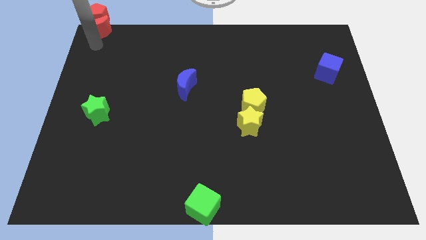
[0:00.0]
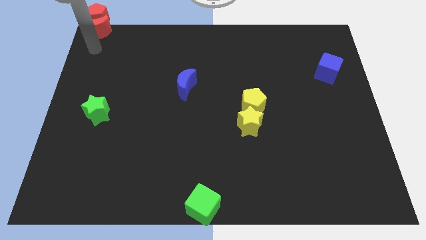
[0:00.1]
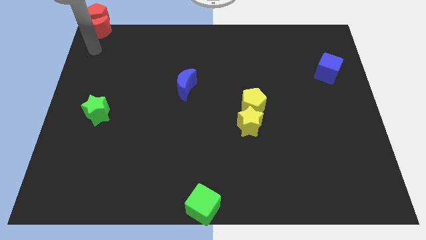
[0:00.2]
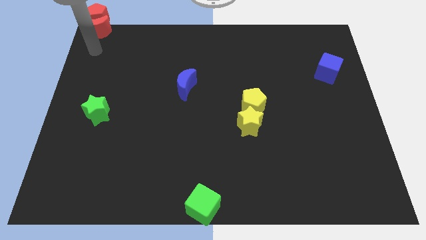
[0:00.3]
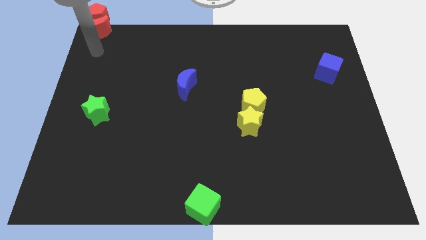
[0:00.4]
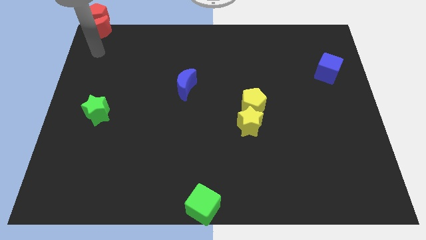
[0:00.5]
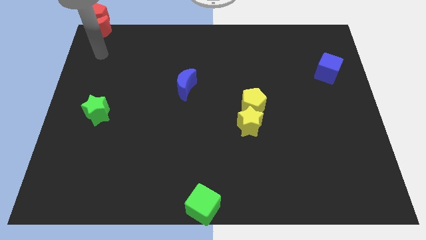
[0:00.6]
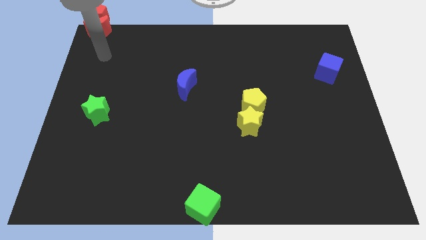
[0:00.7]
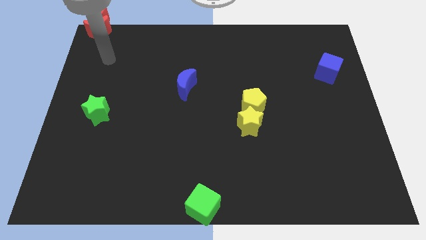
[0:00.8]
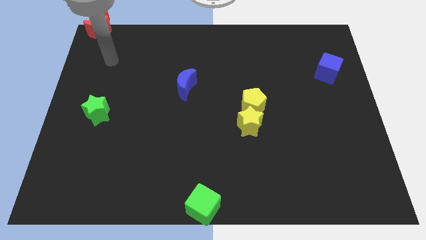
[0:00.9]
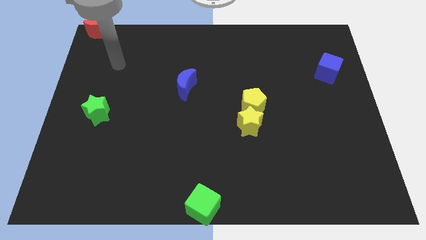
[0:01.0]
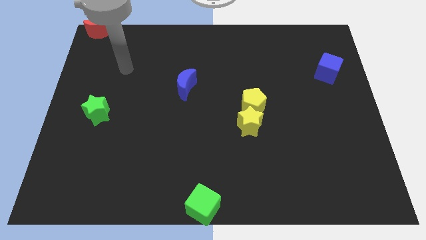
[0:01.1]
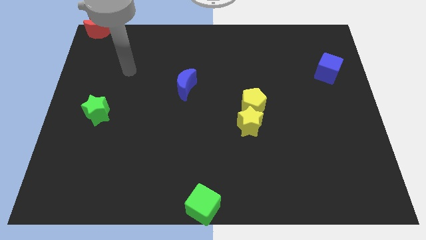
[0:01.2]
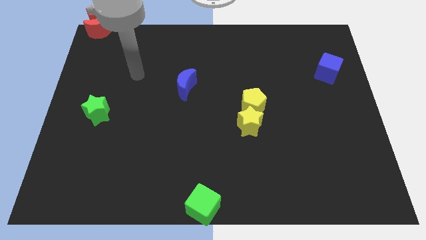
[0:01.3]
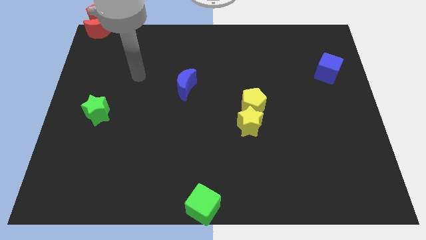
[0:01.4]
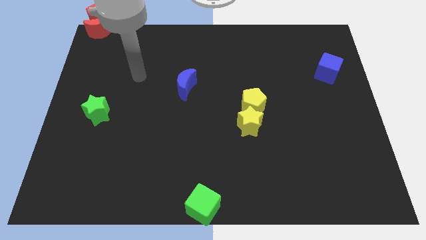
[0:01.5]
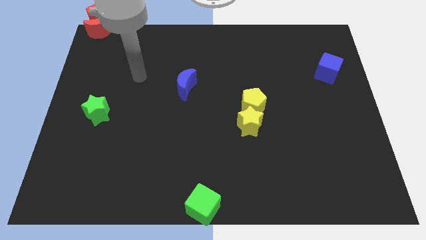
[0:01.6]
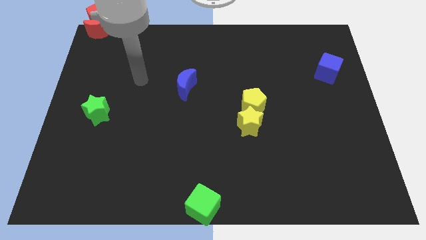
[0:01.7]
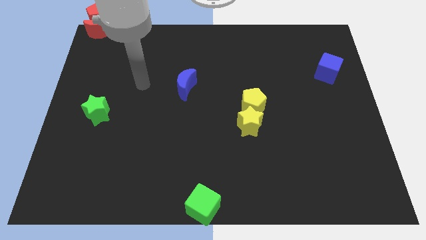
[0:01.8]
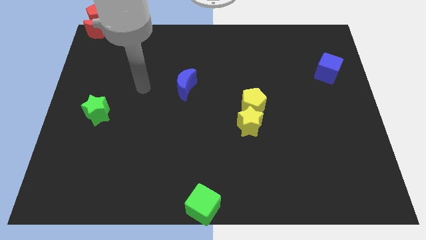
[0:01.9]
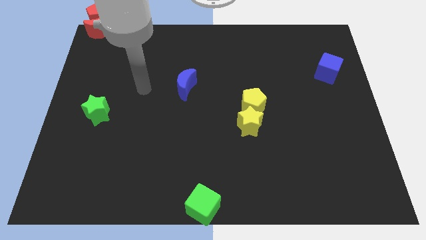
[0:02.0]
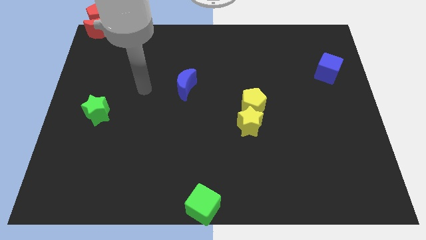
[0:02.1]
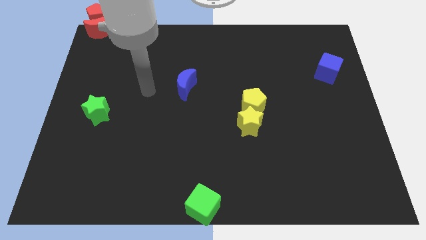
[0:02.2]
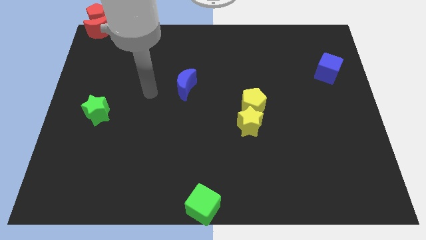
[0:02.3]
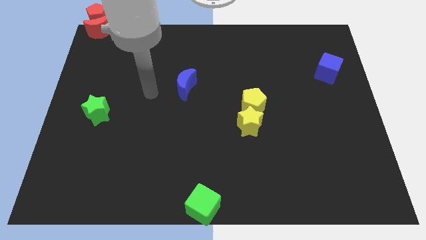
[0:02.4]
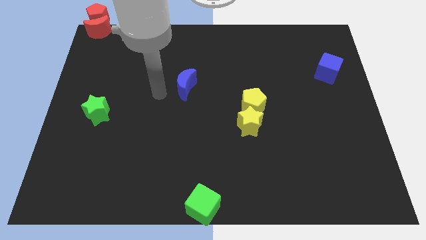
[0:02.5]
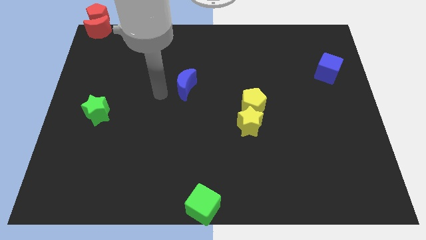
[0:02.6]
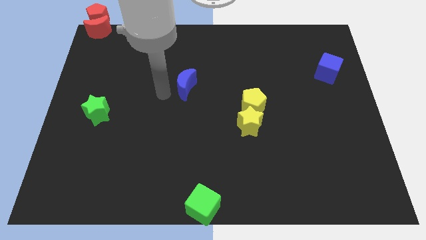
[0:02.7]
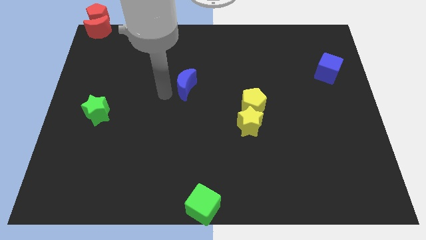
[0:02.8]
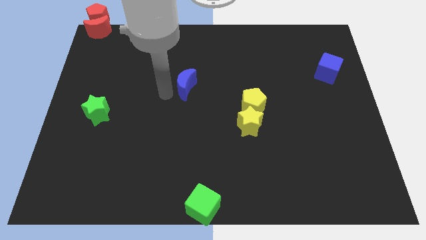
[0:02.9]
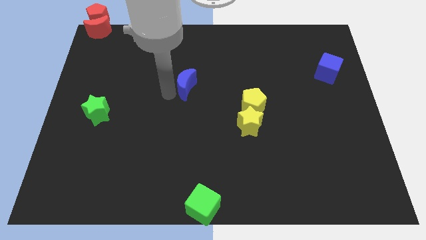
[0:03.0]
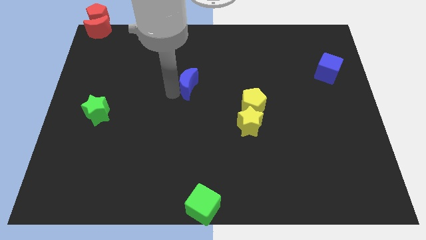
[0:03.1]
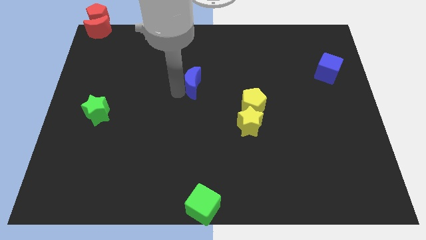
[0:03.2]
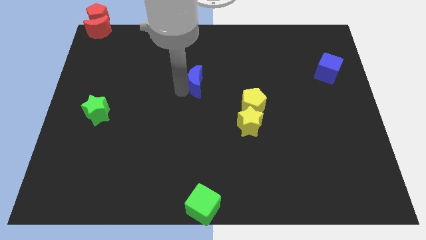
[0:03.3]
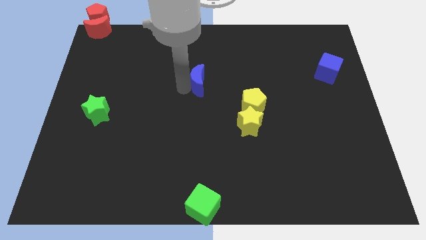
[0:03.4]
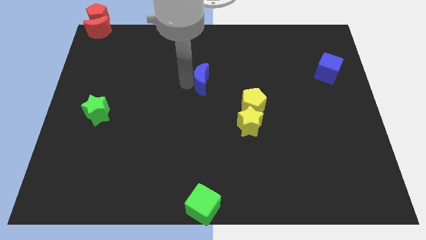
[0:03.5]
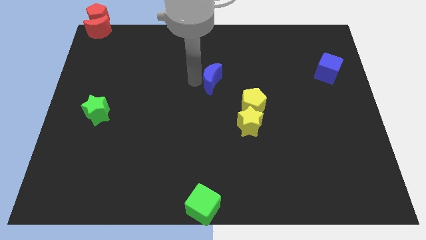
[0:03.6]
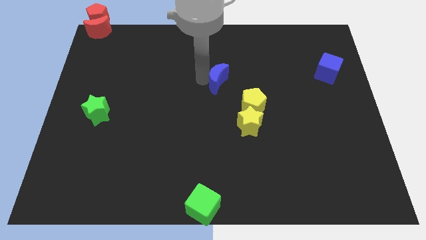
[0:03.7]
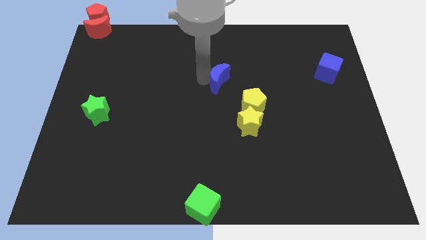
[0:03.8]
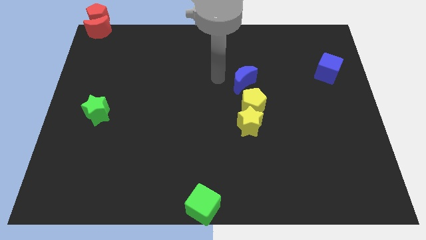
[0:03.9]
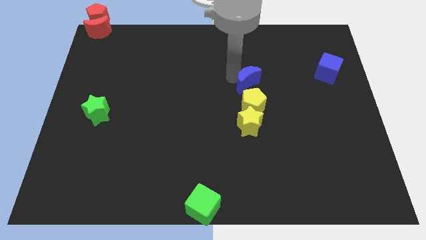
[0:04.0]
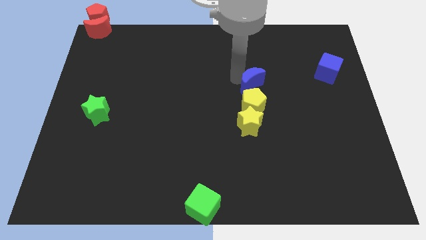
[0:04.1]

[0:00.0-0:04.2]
push the blue moon above yellow pentagon

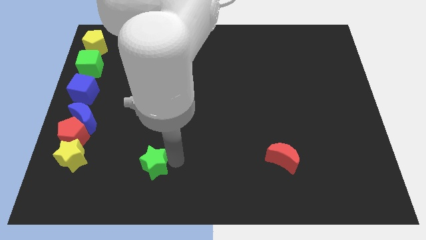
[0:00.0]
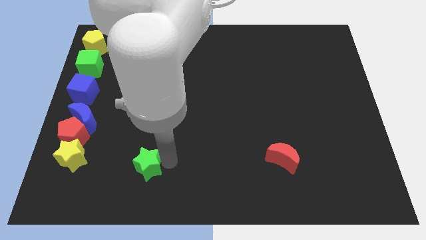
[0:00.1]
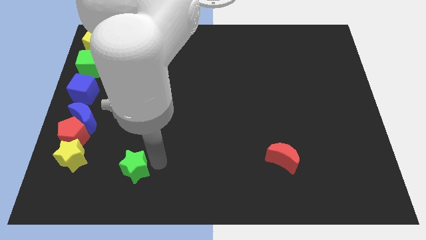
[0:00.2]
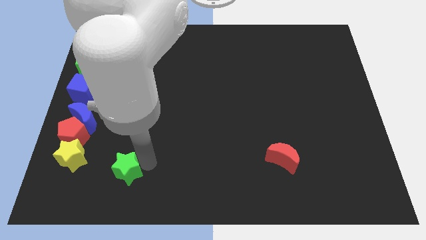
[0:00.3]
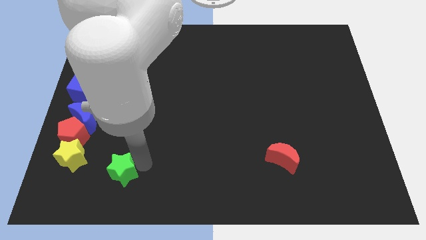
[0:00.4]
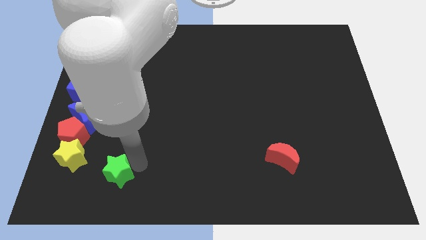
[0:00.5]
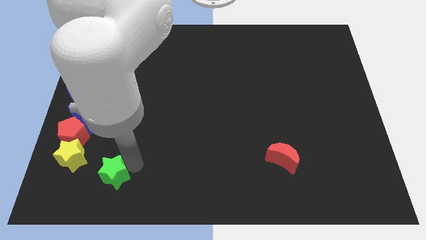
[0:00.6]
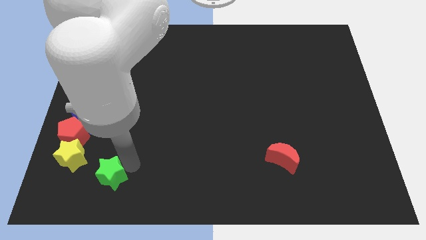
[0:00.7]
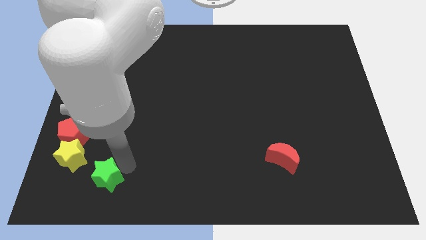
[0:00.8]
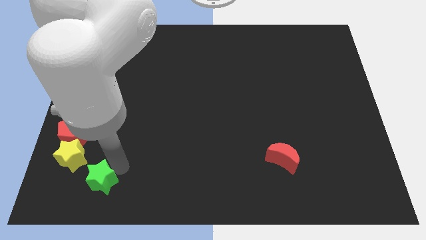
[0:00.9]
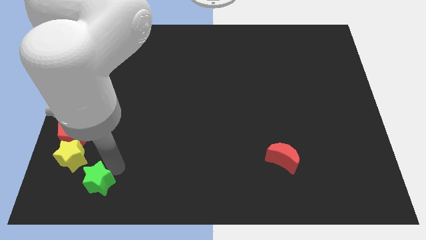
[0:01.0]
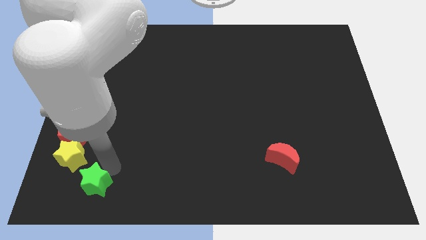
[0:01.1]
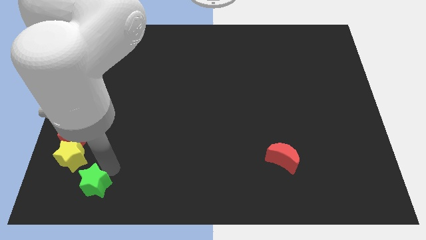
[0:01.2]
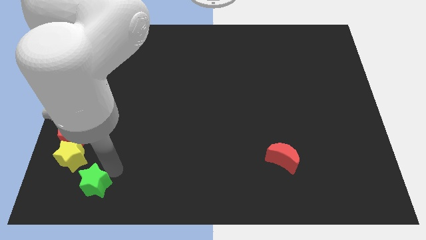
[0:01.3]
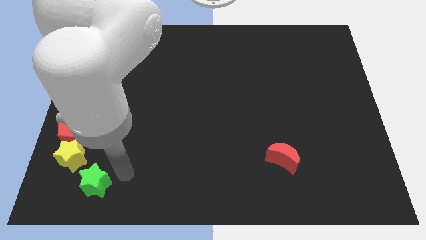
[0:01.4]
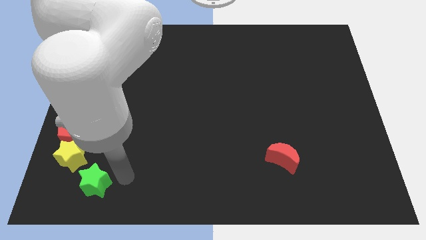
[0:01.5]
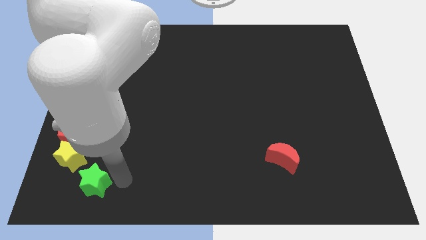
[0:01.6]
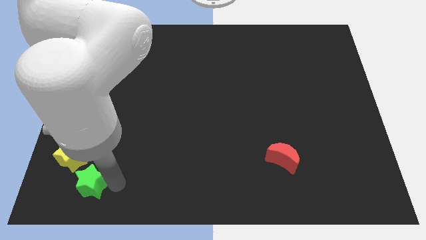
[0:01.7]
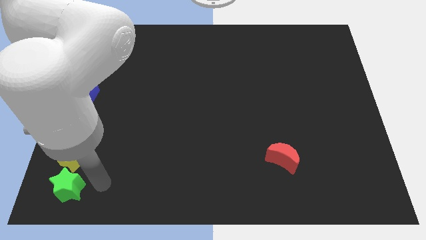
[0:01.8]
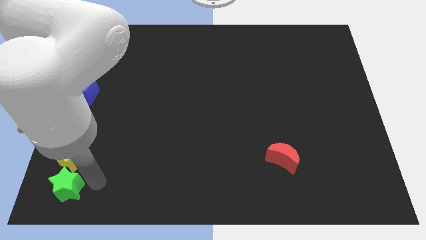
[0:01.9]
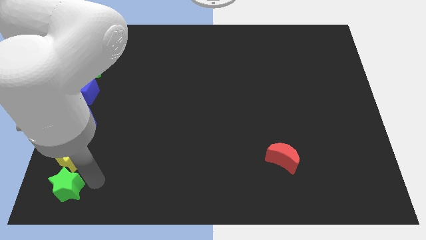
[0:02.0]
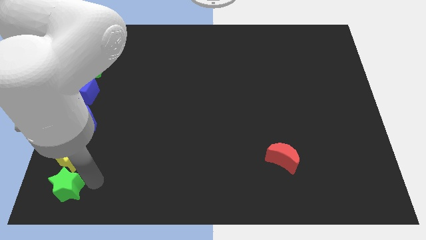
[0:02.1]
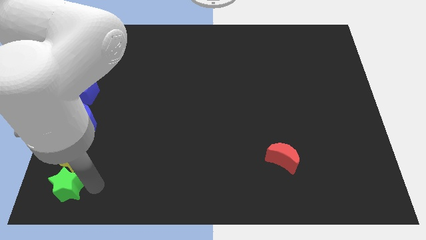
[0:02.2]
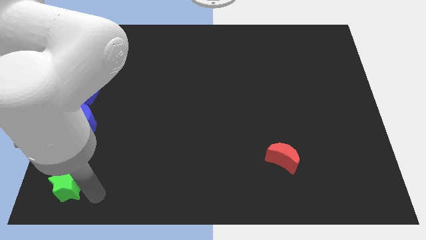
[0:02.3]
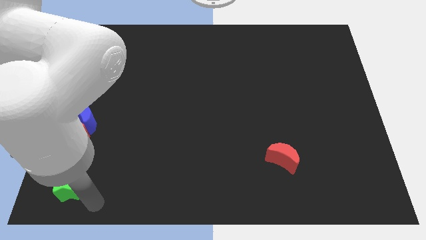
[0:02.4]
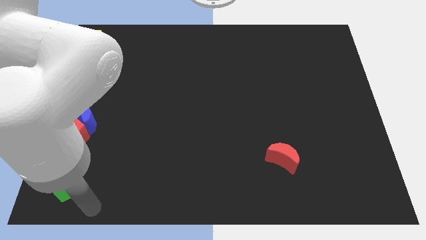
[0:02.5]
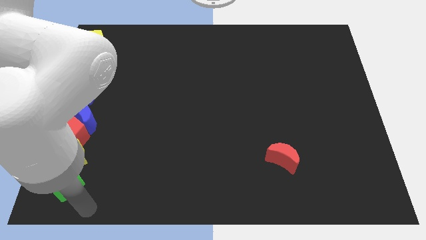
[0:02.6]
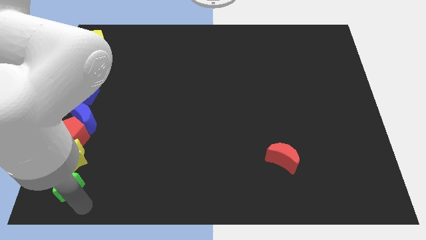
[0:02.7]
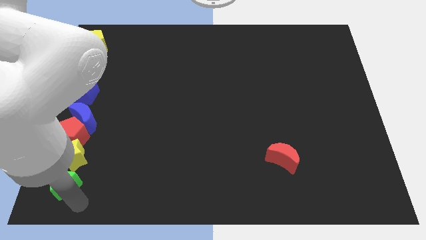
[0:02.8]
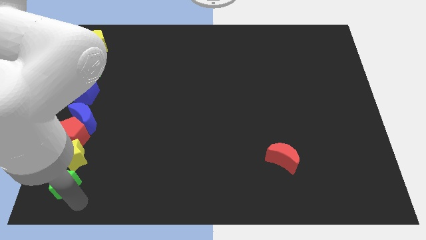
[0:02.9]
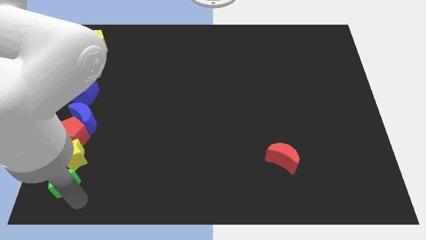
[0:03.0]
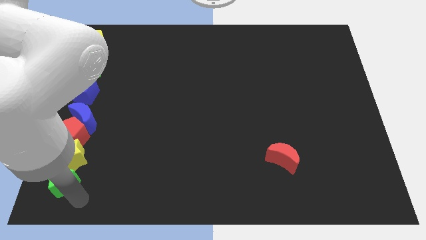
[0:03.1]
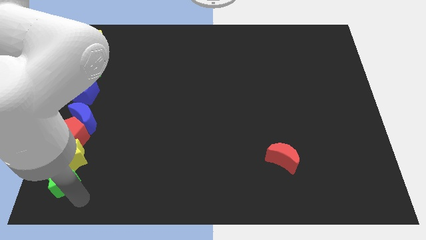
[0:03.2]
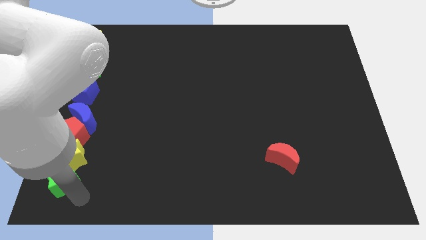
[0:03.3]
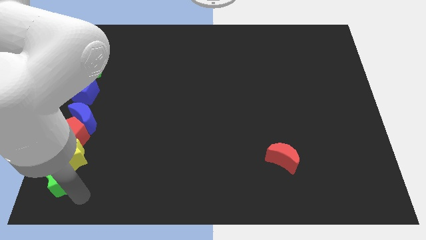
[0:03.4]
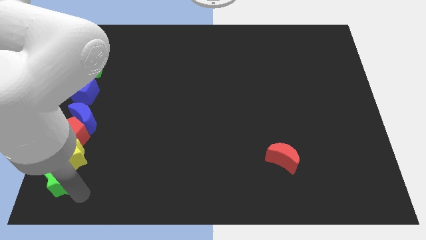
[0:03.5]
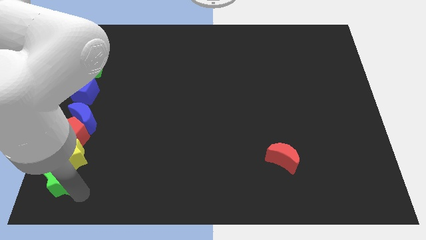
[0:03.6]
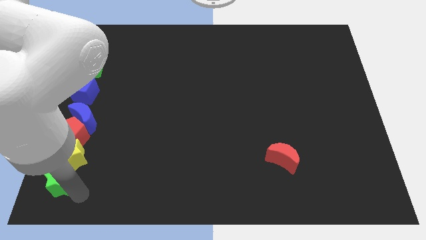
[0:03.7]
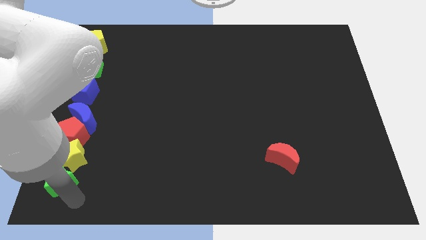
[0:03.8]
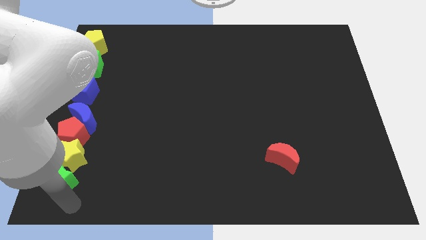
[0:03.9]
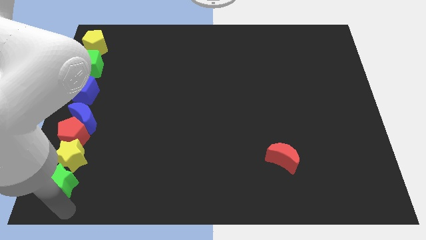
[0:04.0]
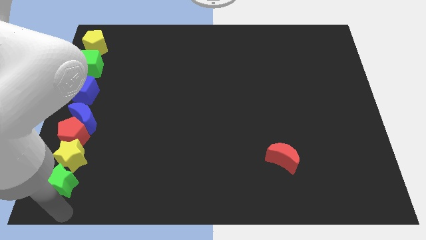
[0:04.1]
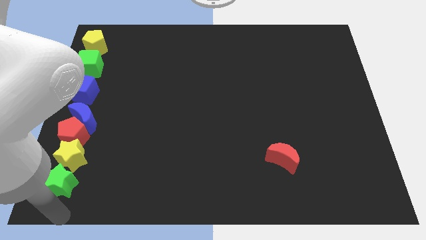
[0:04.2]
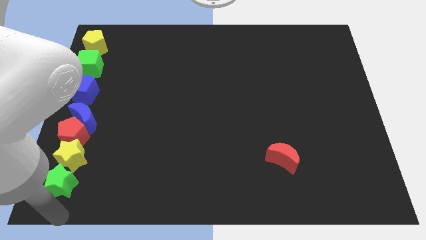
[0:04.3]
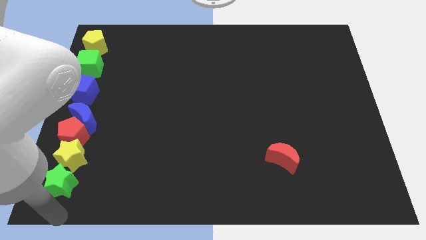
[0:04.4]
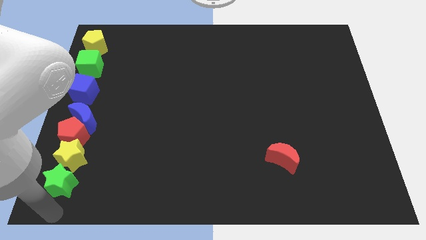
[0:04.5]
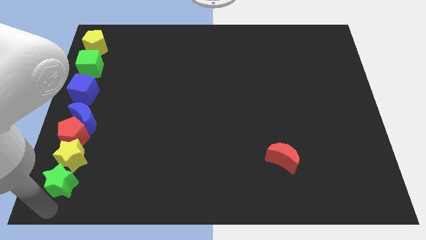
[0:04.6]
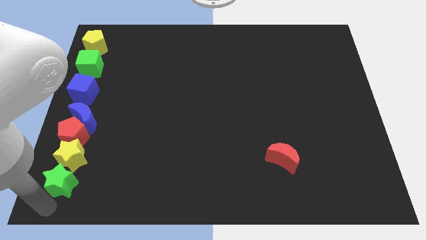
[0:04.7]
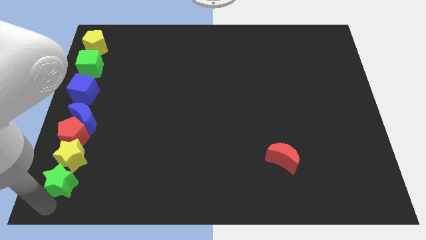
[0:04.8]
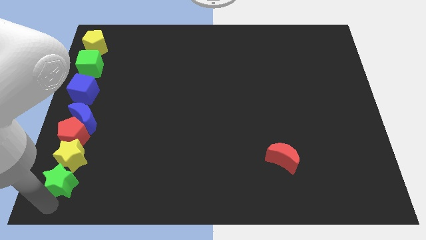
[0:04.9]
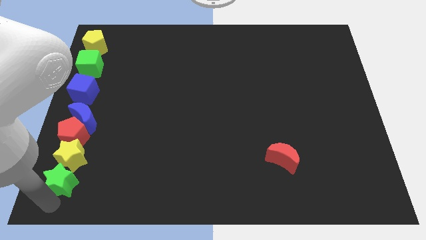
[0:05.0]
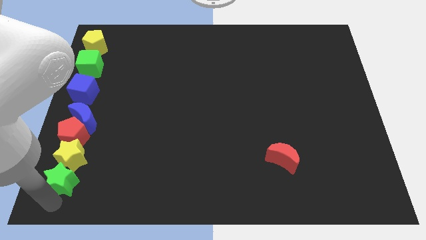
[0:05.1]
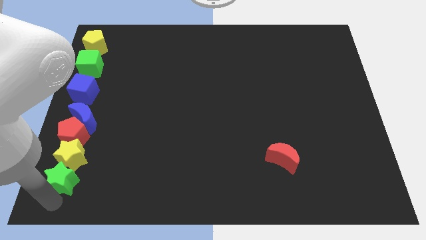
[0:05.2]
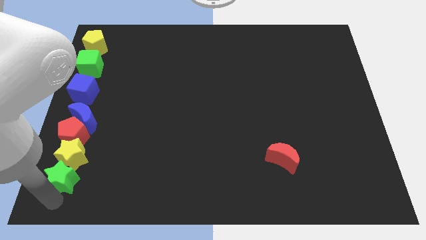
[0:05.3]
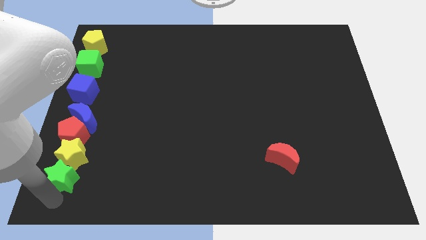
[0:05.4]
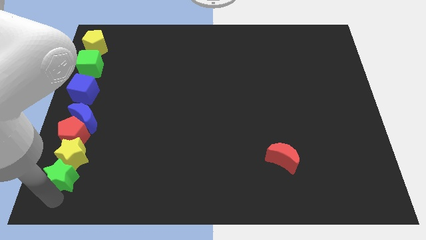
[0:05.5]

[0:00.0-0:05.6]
place the green star below the yellow star
